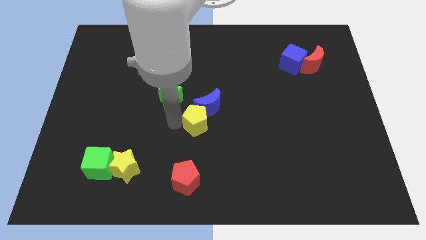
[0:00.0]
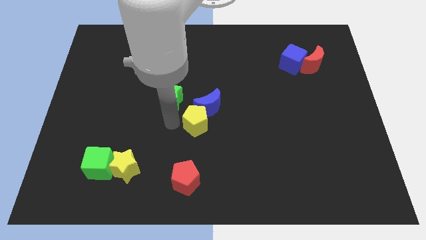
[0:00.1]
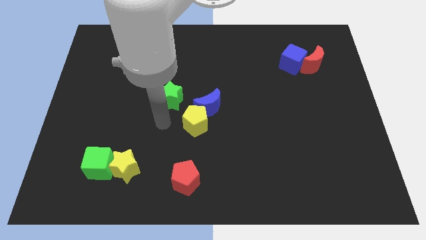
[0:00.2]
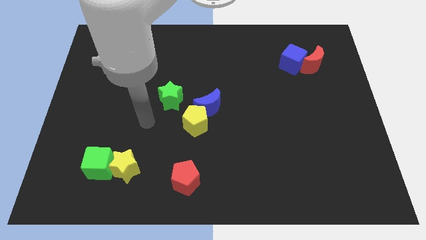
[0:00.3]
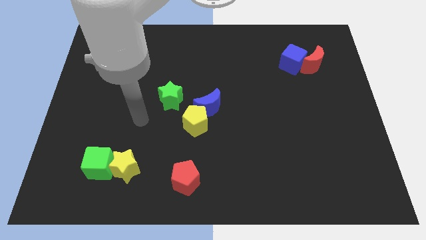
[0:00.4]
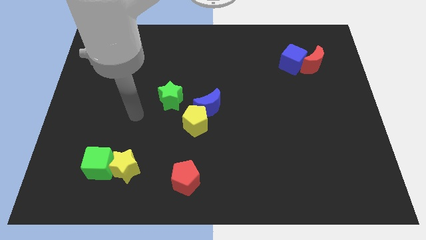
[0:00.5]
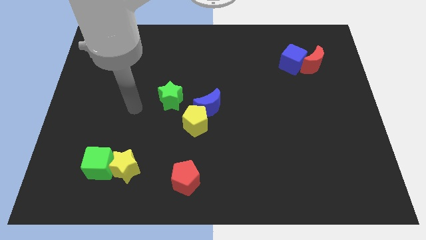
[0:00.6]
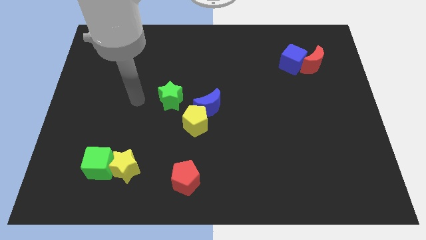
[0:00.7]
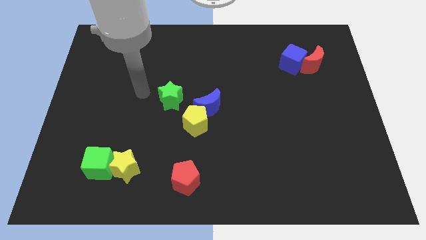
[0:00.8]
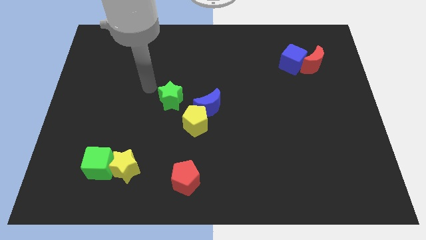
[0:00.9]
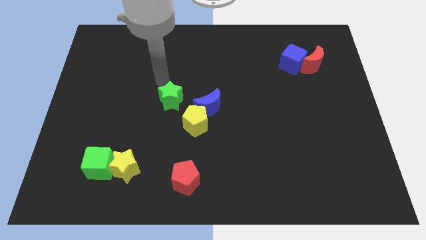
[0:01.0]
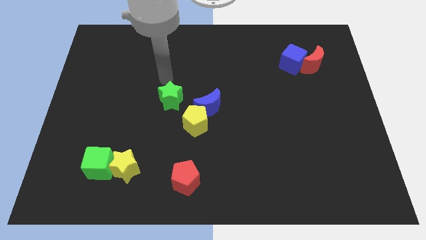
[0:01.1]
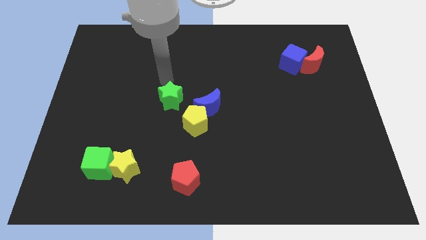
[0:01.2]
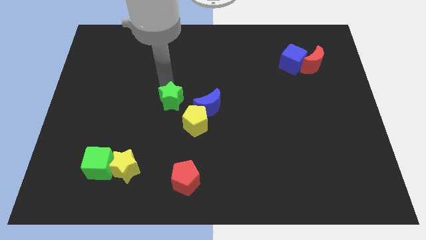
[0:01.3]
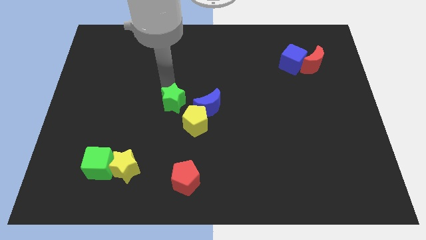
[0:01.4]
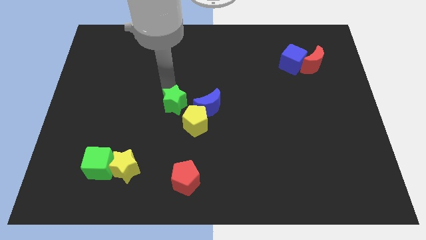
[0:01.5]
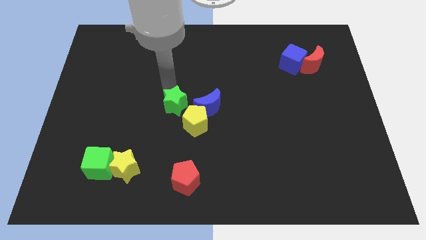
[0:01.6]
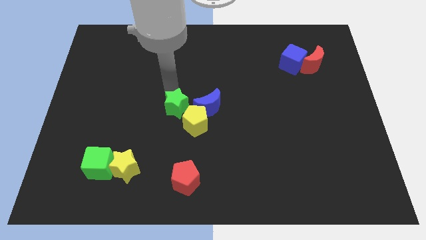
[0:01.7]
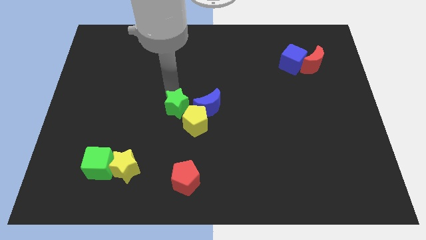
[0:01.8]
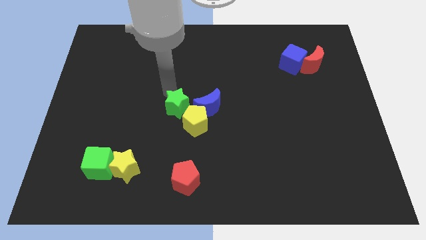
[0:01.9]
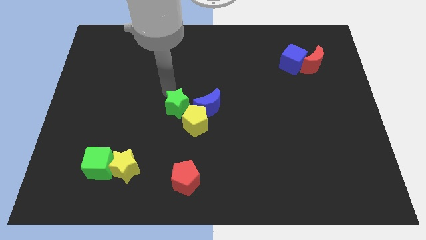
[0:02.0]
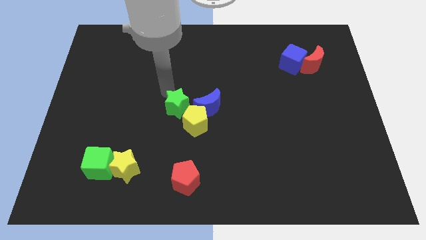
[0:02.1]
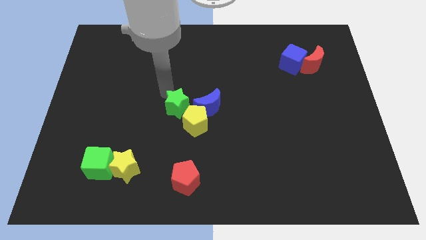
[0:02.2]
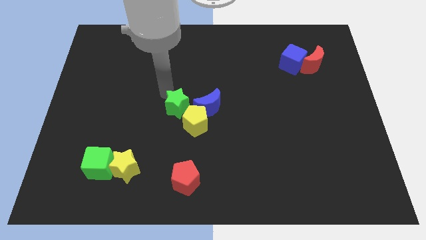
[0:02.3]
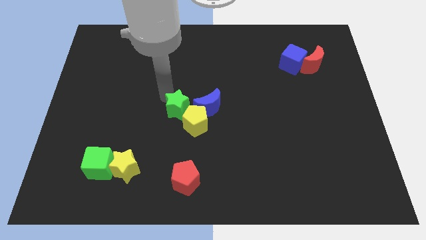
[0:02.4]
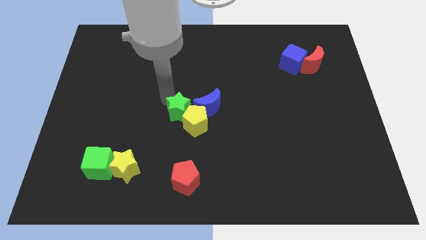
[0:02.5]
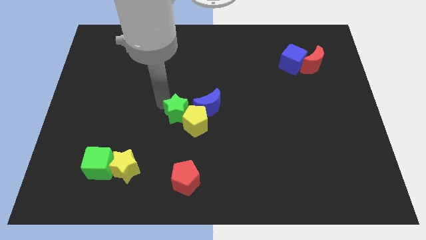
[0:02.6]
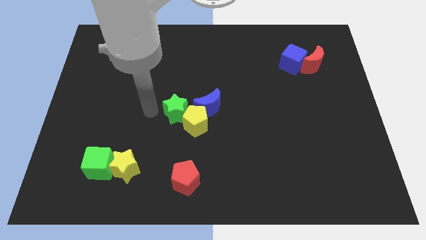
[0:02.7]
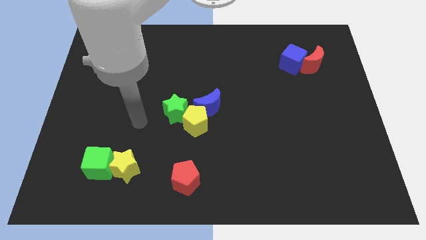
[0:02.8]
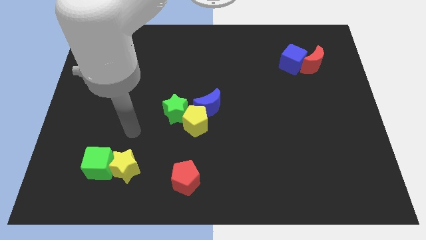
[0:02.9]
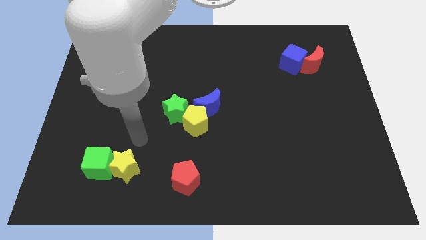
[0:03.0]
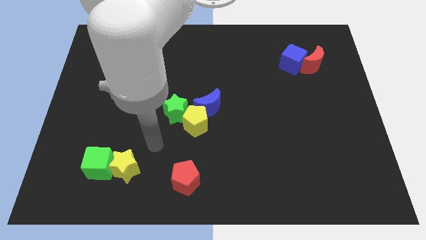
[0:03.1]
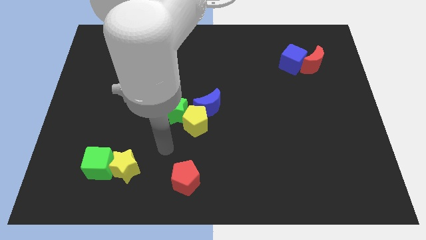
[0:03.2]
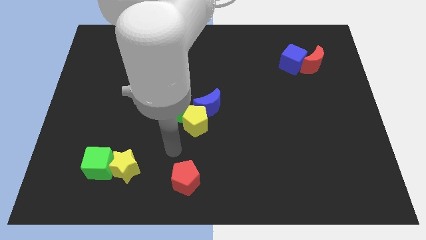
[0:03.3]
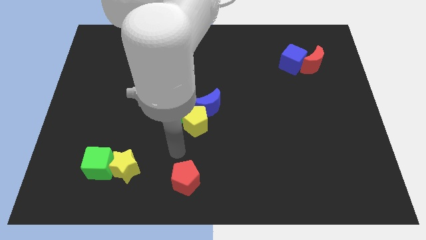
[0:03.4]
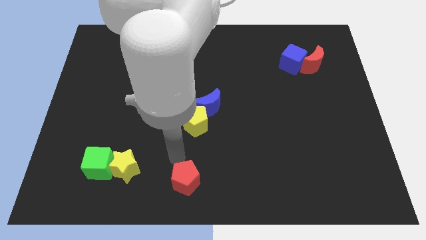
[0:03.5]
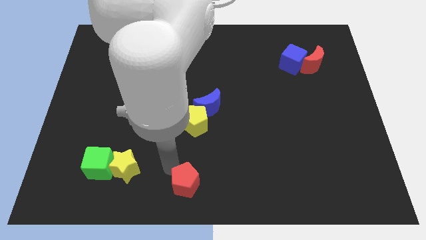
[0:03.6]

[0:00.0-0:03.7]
move the green star into the yellow pentagon

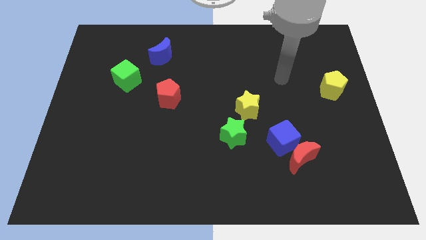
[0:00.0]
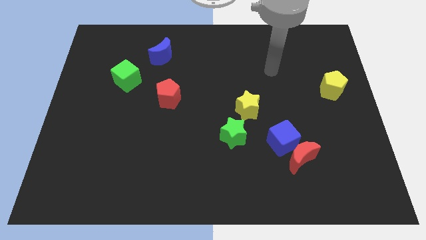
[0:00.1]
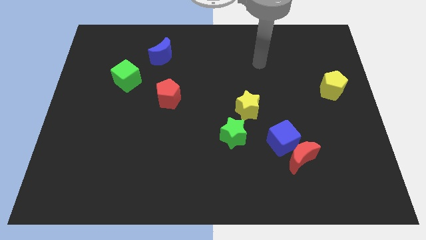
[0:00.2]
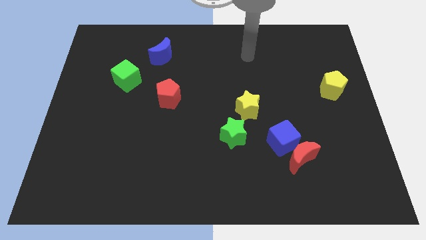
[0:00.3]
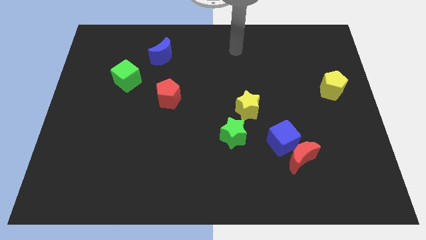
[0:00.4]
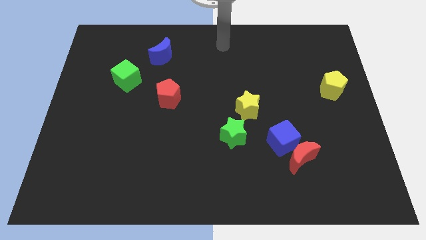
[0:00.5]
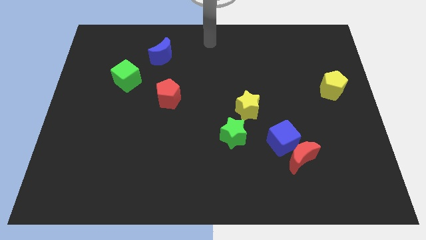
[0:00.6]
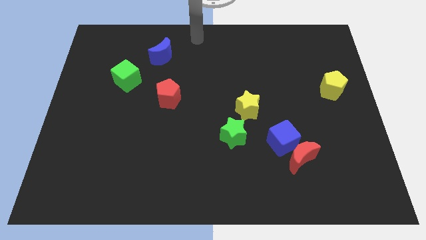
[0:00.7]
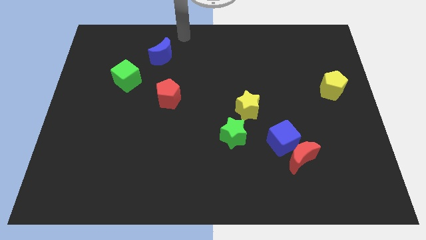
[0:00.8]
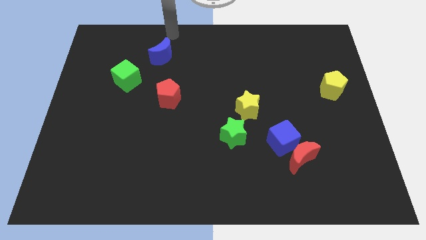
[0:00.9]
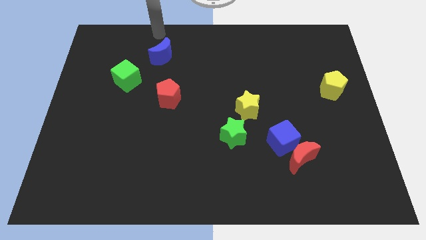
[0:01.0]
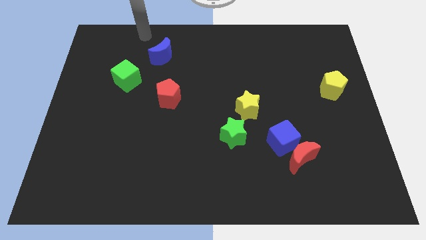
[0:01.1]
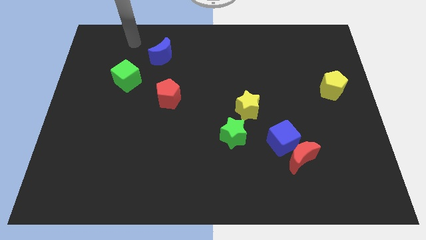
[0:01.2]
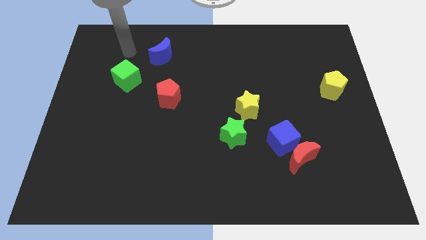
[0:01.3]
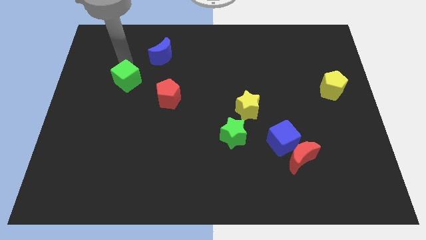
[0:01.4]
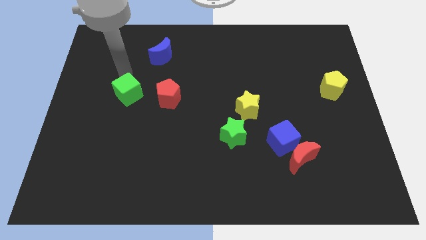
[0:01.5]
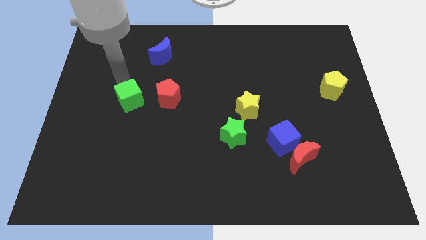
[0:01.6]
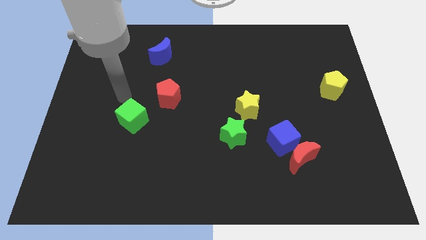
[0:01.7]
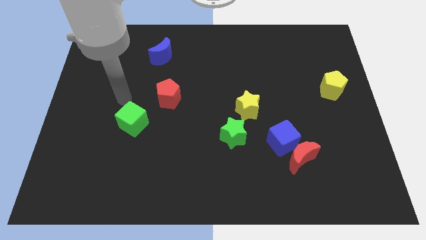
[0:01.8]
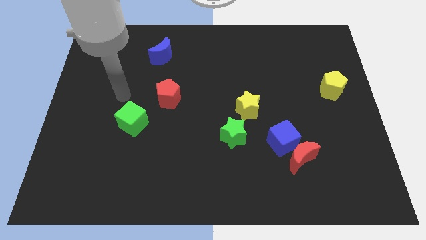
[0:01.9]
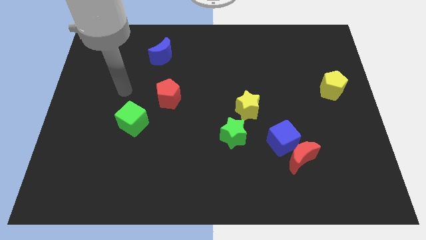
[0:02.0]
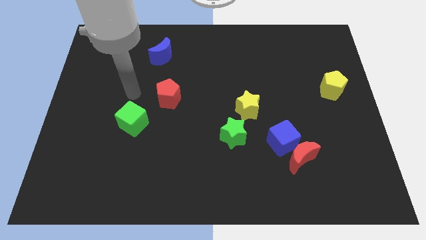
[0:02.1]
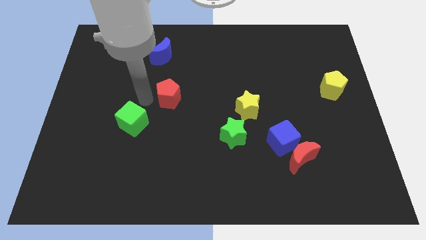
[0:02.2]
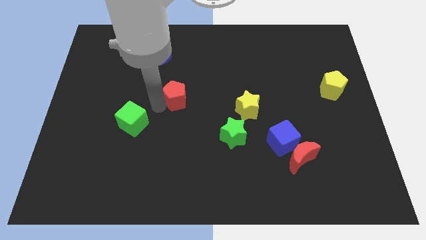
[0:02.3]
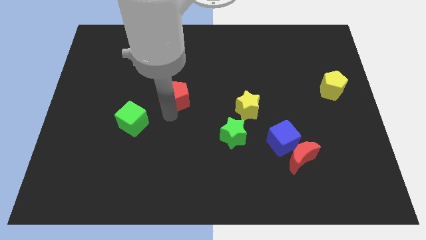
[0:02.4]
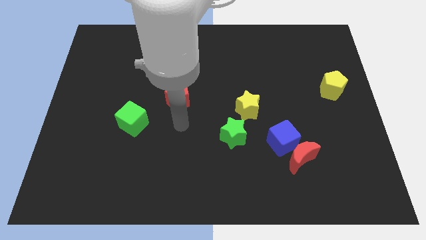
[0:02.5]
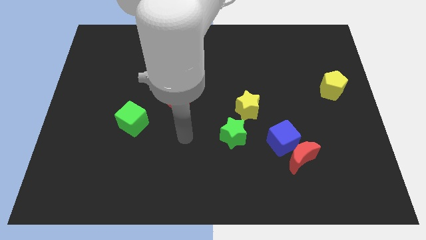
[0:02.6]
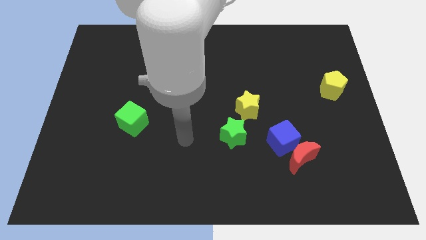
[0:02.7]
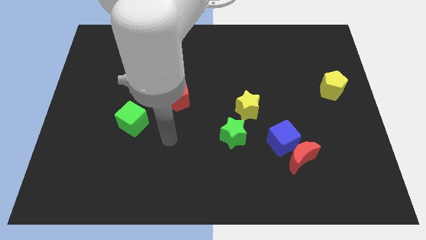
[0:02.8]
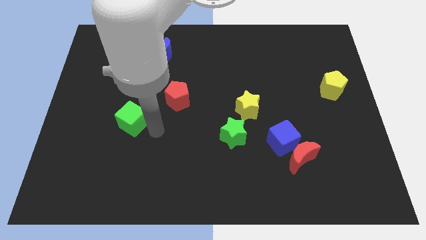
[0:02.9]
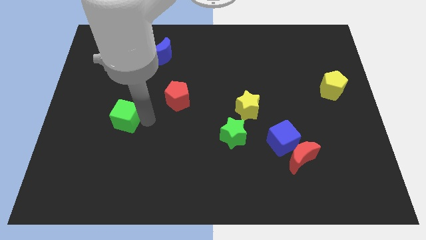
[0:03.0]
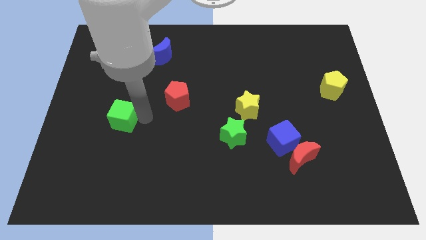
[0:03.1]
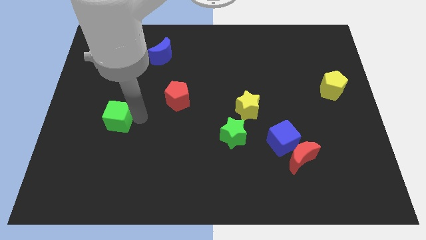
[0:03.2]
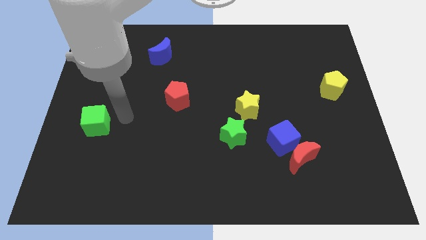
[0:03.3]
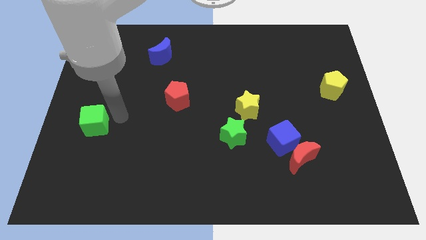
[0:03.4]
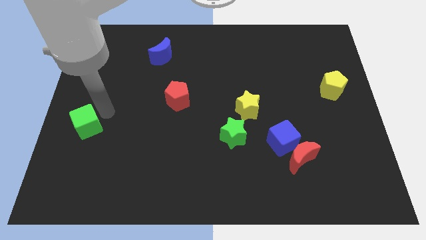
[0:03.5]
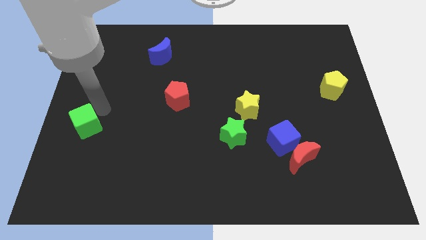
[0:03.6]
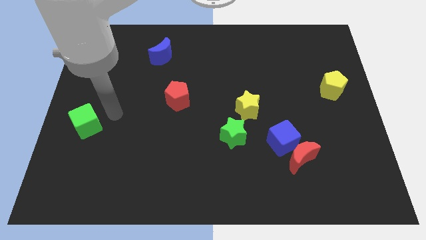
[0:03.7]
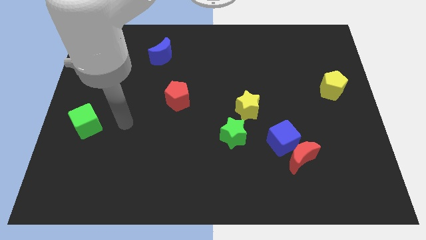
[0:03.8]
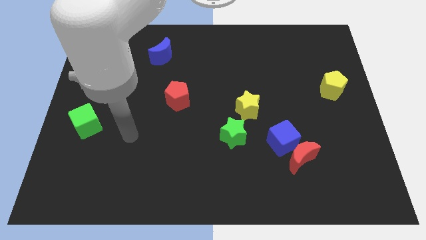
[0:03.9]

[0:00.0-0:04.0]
push the green cube to the left side of the board

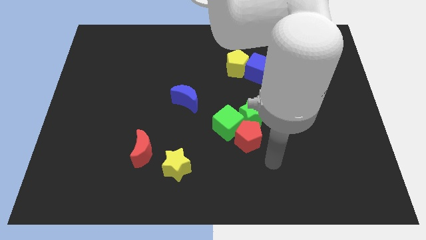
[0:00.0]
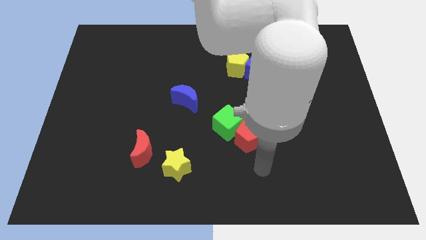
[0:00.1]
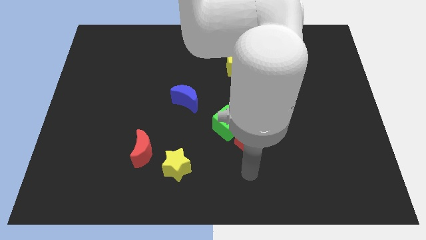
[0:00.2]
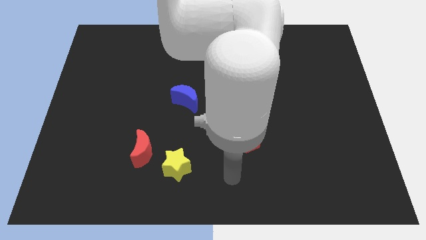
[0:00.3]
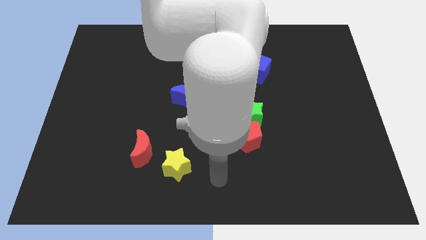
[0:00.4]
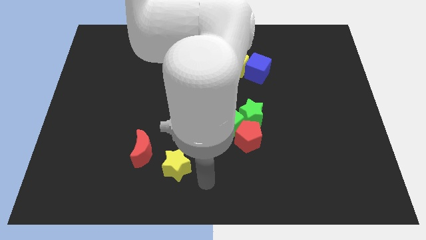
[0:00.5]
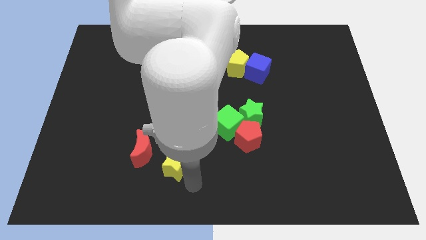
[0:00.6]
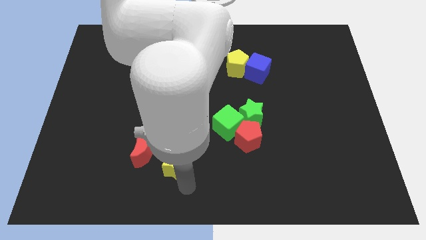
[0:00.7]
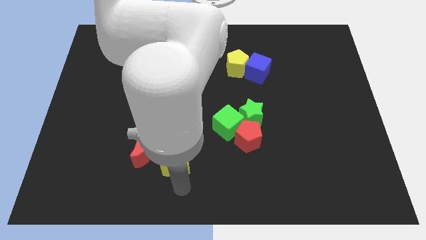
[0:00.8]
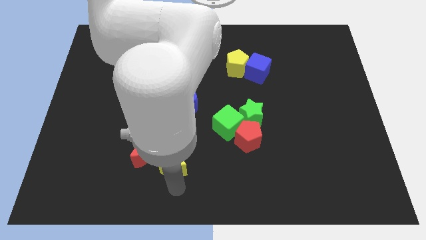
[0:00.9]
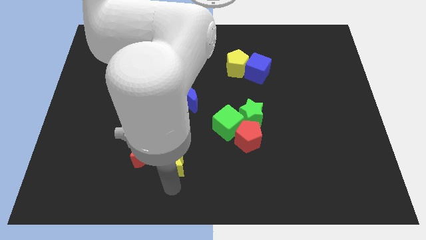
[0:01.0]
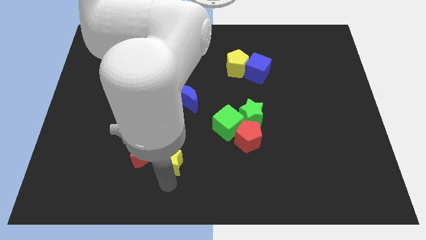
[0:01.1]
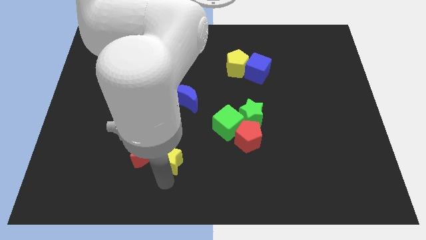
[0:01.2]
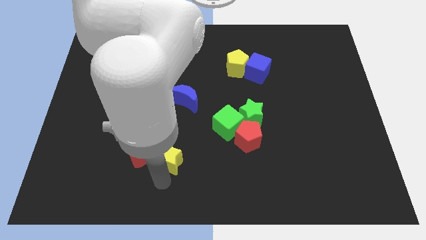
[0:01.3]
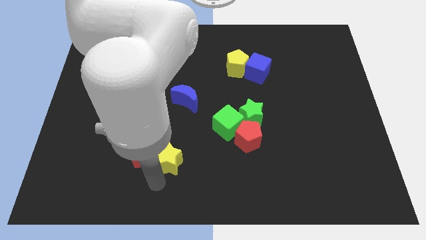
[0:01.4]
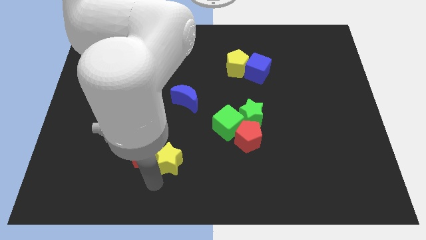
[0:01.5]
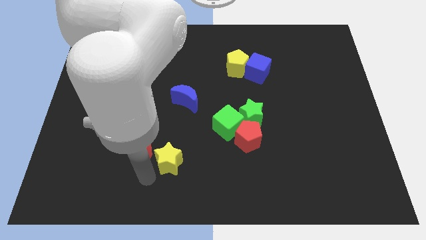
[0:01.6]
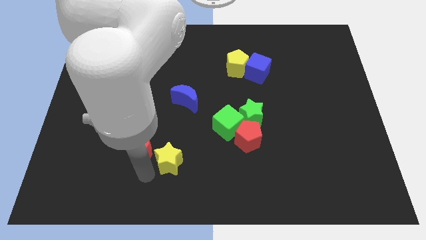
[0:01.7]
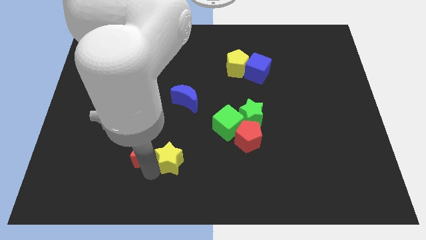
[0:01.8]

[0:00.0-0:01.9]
move the arm in between red crescent and yellow star
